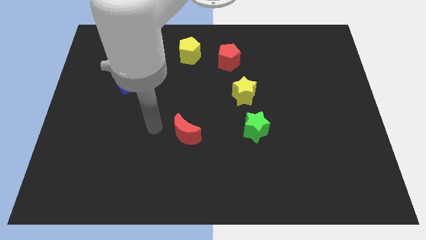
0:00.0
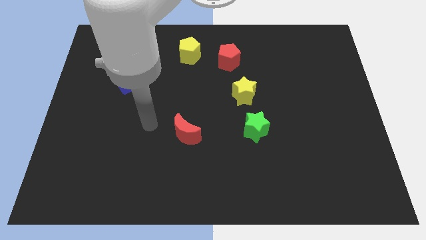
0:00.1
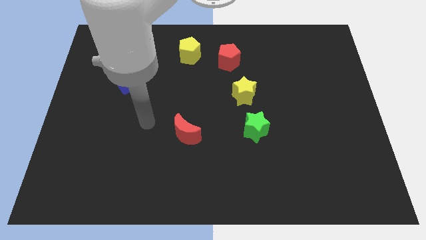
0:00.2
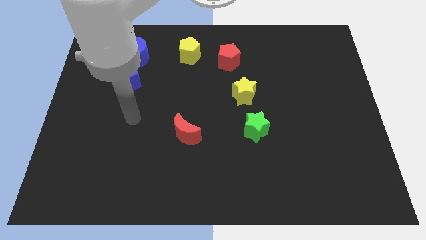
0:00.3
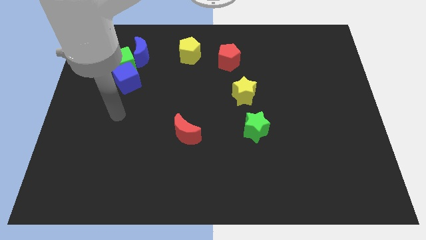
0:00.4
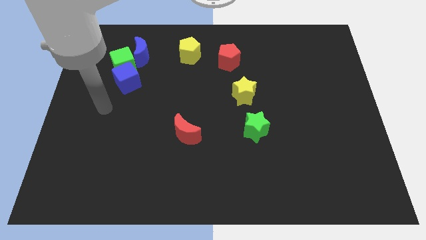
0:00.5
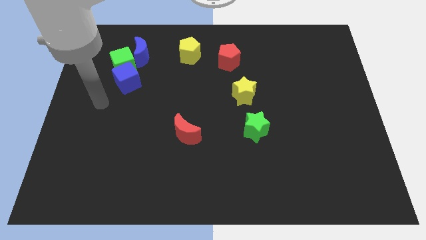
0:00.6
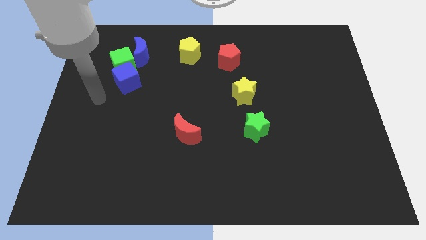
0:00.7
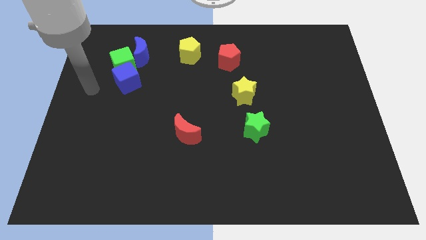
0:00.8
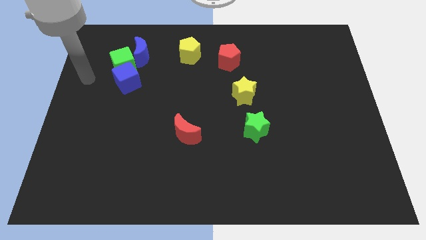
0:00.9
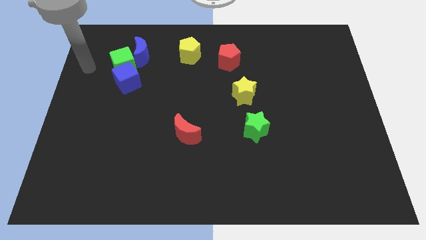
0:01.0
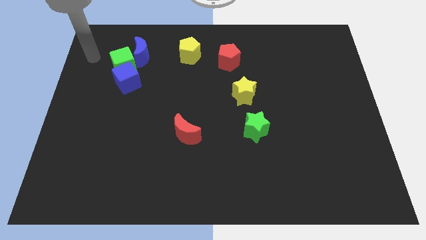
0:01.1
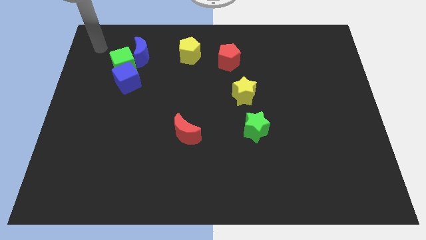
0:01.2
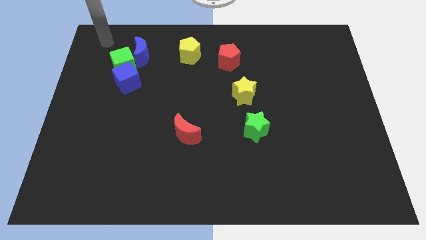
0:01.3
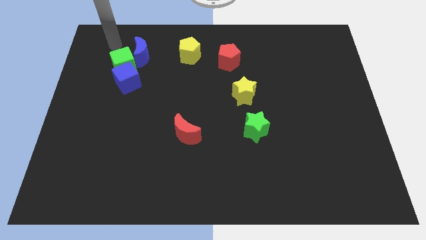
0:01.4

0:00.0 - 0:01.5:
move your arm to the top of the green cube

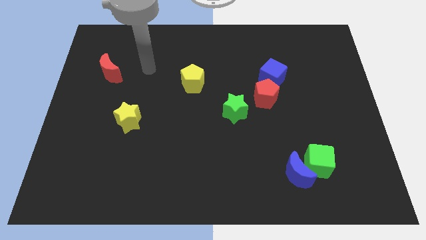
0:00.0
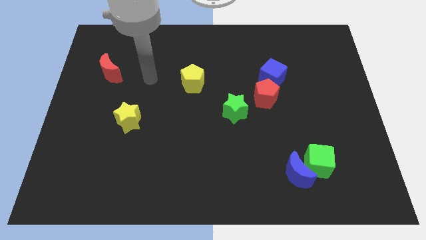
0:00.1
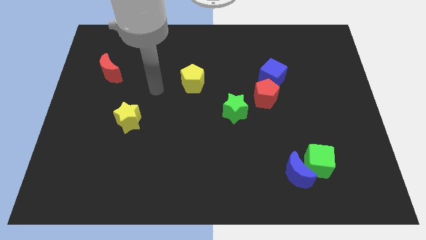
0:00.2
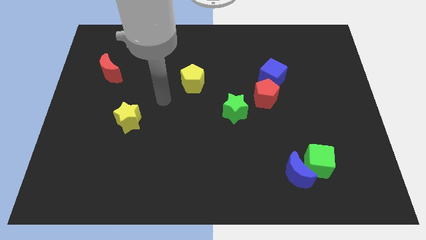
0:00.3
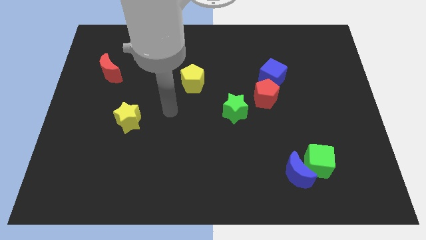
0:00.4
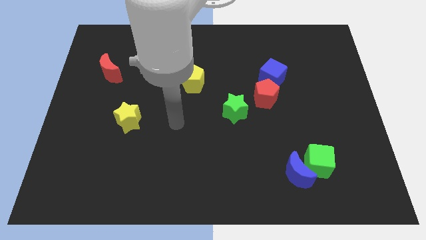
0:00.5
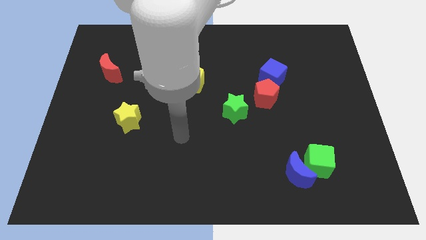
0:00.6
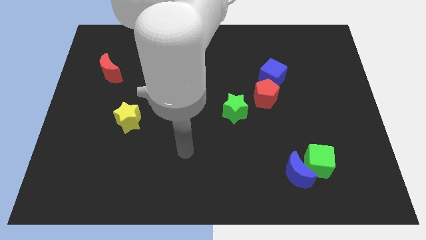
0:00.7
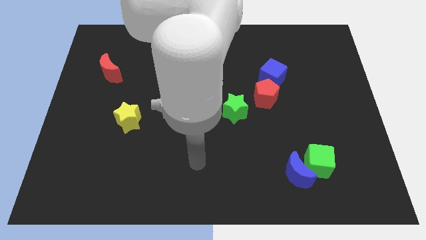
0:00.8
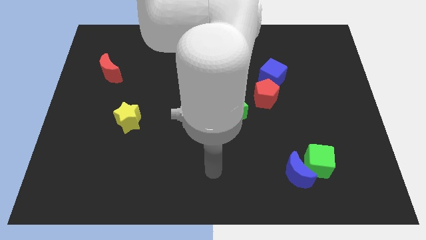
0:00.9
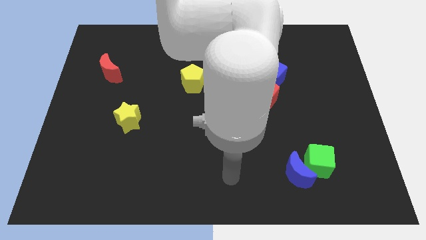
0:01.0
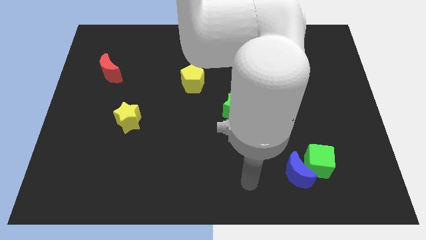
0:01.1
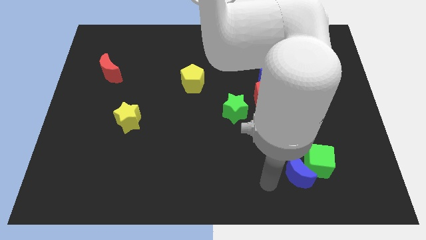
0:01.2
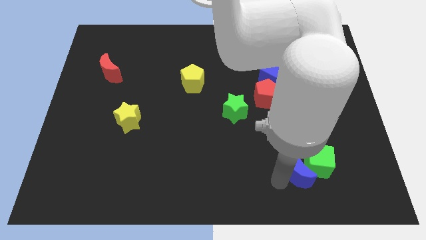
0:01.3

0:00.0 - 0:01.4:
move your arm to the right of blue moon

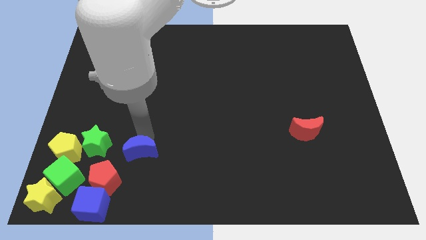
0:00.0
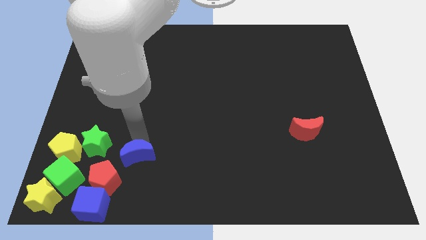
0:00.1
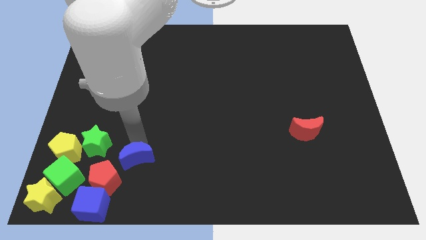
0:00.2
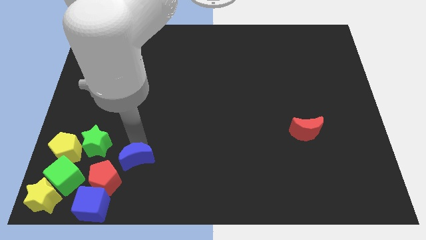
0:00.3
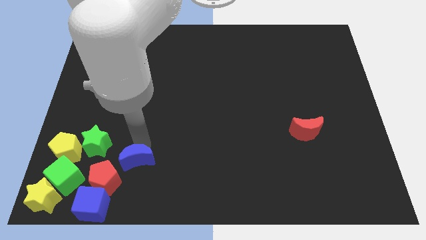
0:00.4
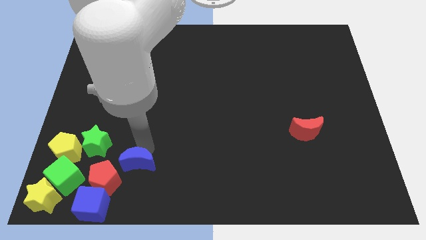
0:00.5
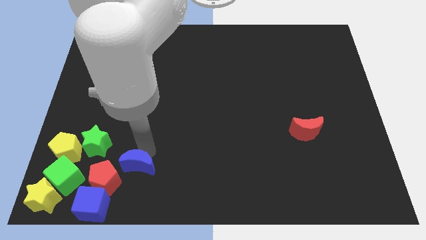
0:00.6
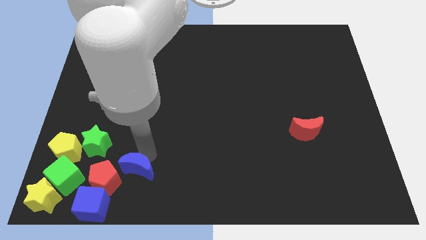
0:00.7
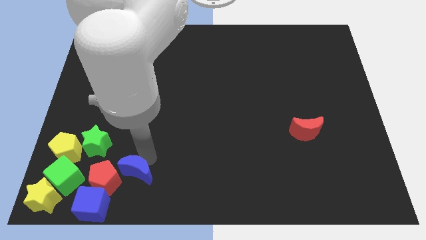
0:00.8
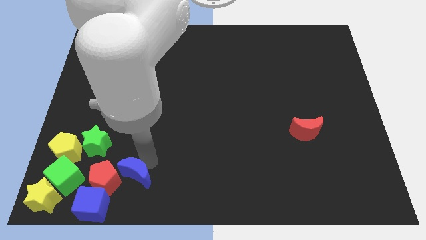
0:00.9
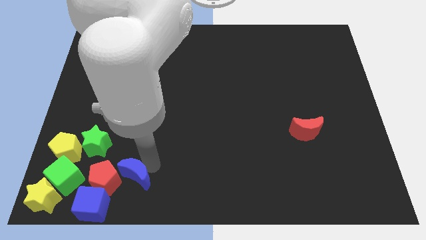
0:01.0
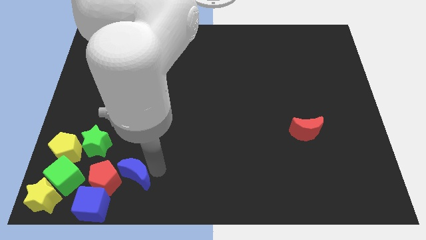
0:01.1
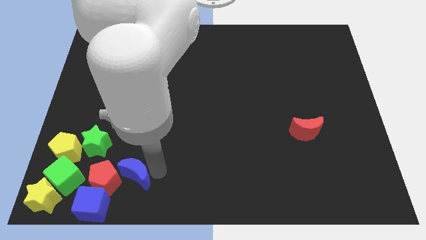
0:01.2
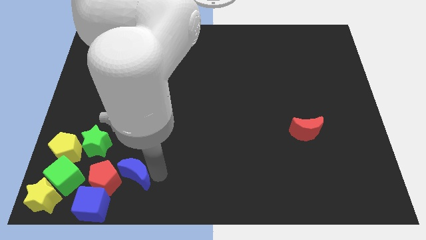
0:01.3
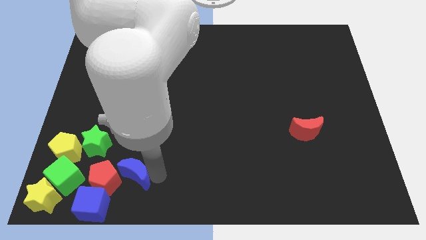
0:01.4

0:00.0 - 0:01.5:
move the blue crescent right to the red pentagon

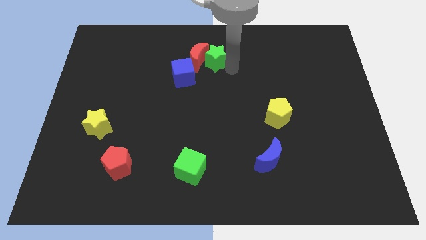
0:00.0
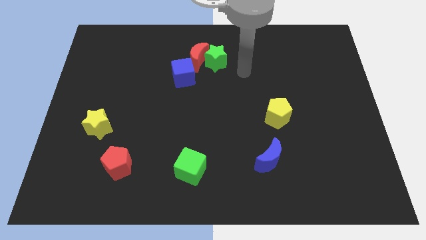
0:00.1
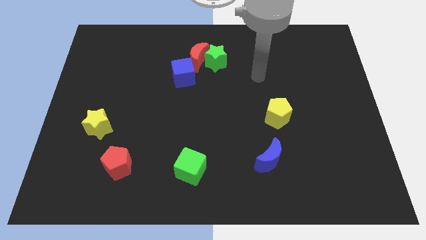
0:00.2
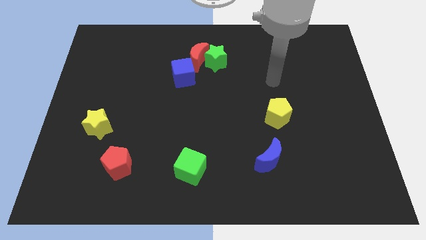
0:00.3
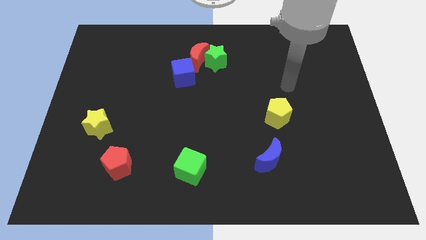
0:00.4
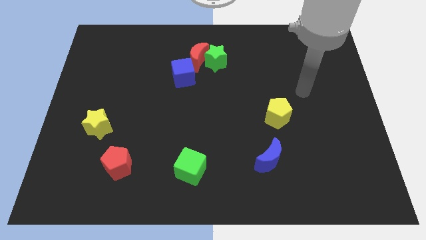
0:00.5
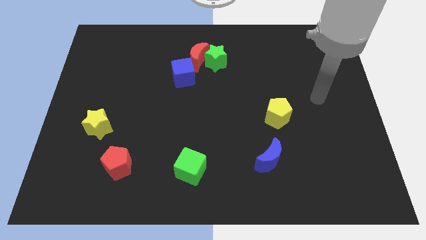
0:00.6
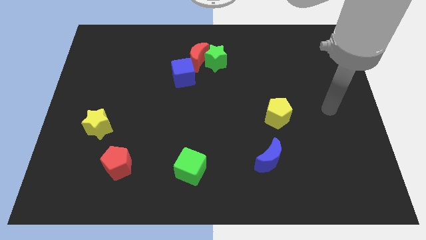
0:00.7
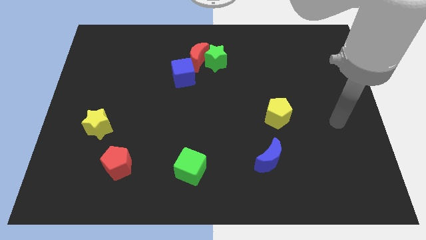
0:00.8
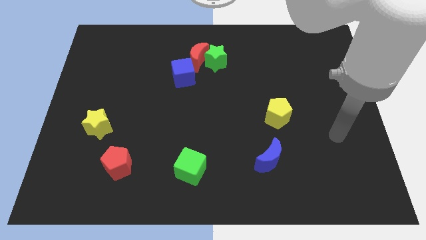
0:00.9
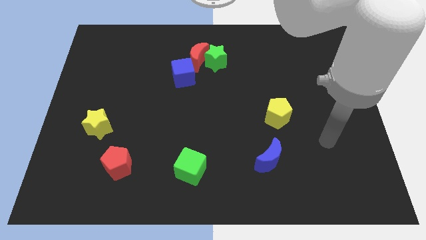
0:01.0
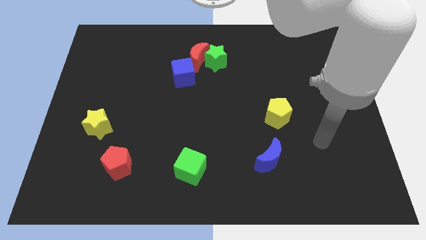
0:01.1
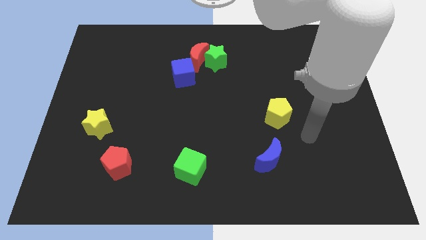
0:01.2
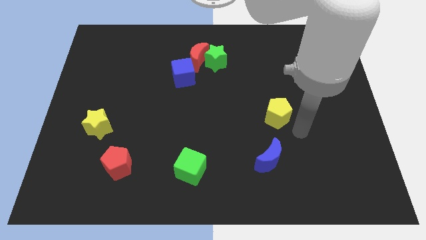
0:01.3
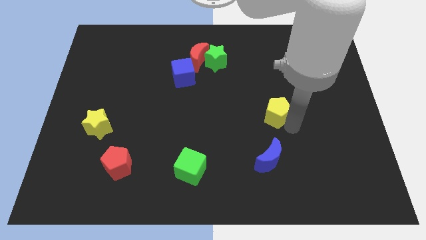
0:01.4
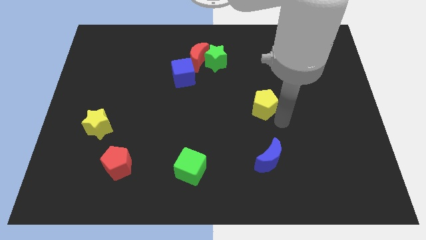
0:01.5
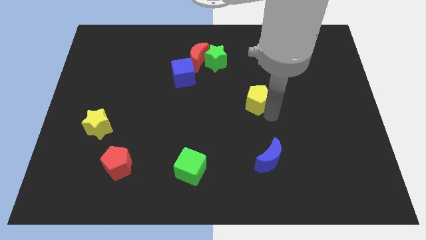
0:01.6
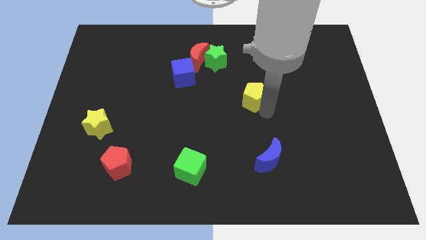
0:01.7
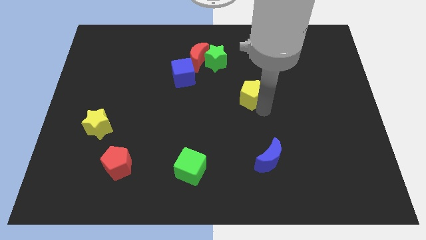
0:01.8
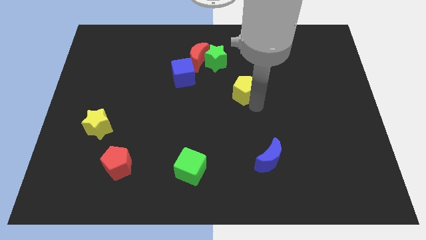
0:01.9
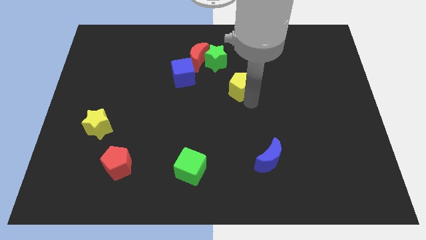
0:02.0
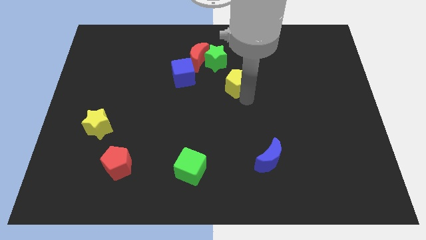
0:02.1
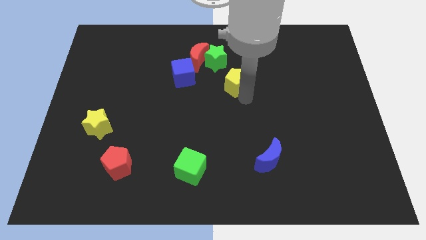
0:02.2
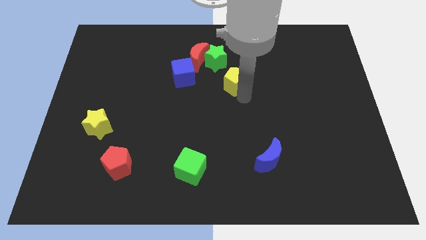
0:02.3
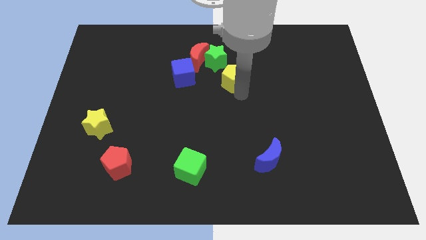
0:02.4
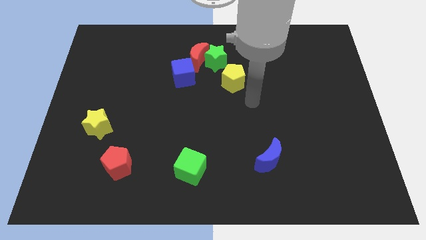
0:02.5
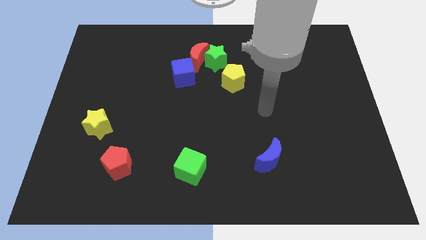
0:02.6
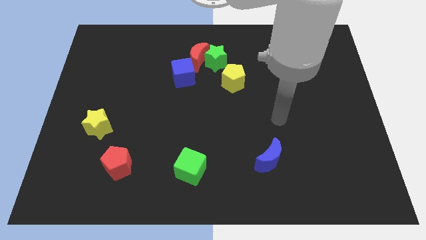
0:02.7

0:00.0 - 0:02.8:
move yellow pentagon towards green star

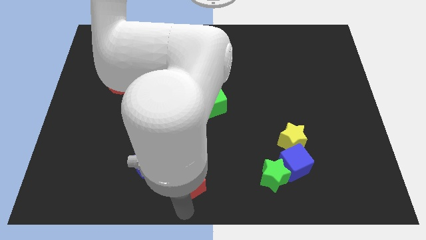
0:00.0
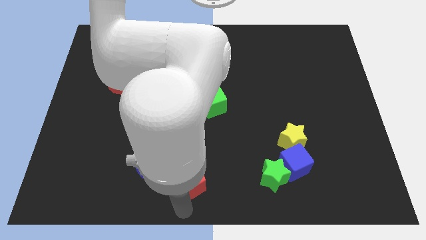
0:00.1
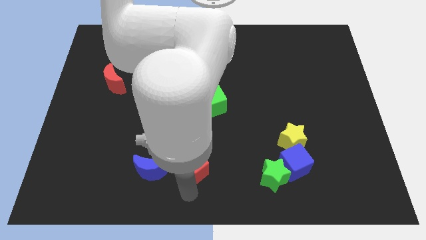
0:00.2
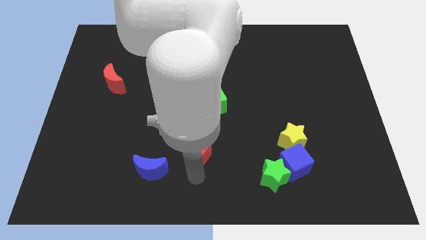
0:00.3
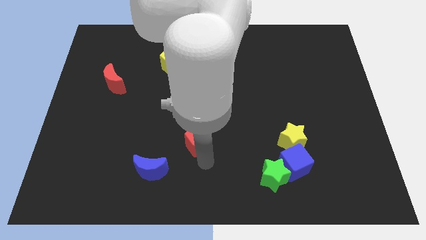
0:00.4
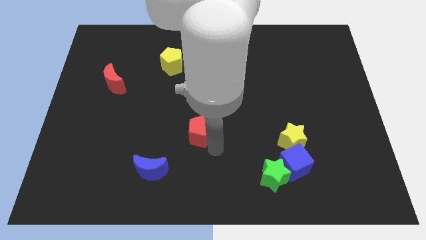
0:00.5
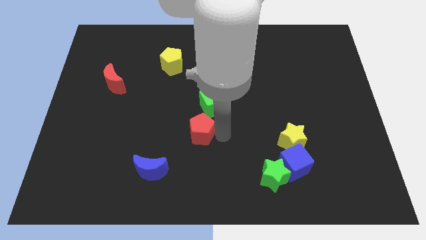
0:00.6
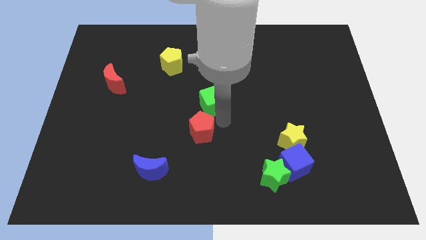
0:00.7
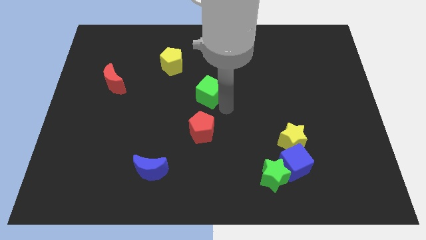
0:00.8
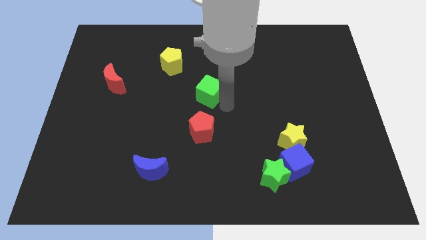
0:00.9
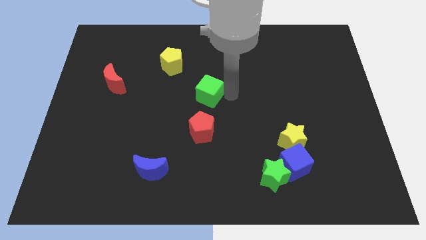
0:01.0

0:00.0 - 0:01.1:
move the red pentagon below the green cube

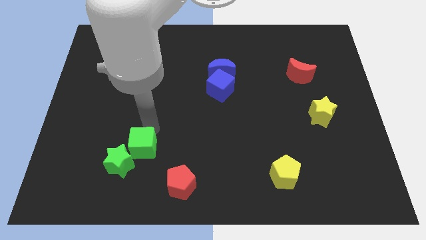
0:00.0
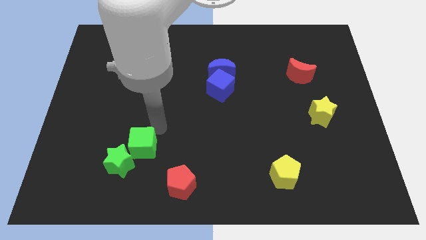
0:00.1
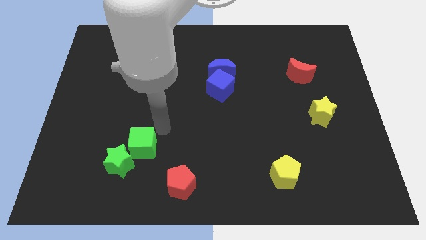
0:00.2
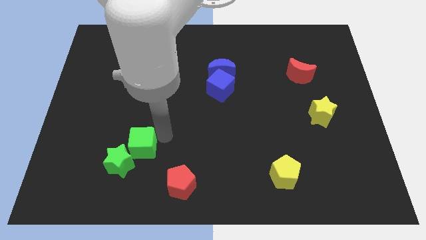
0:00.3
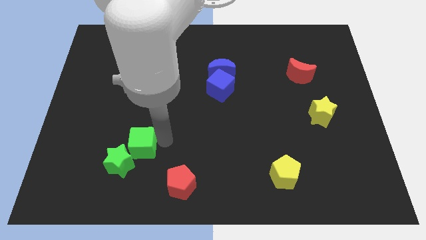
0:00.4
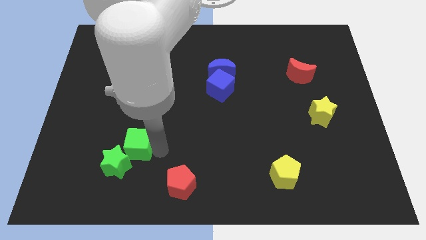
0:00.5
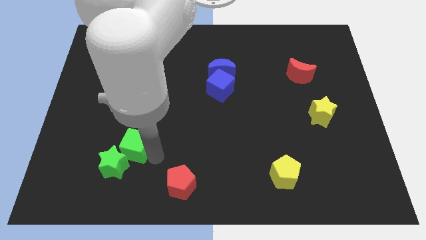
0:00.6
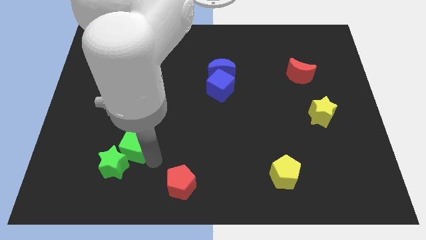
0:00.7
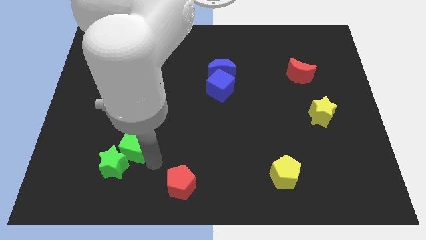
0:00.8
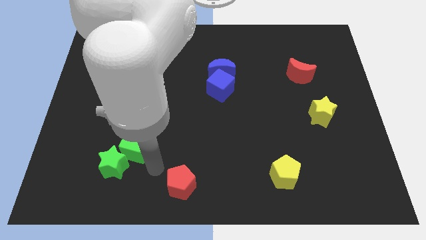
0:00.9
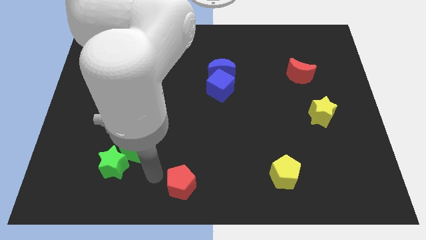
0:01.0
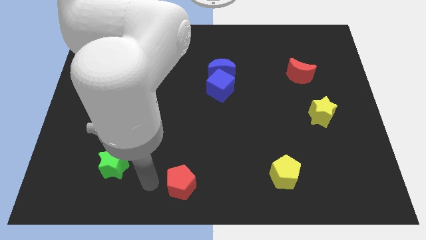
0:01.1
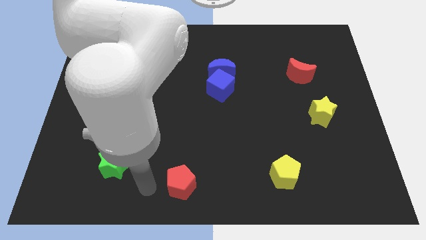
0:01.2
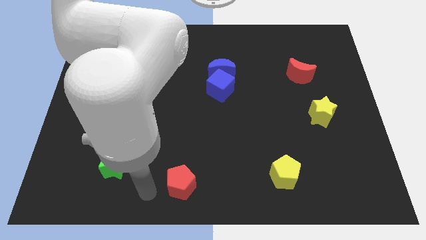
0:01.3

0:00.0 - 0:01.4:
point your arm at the left side of the red pentagon
